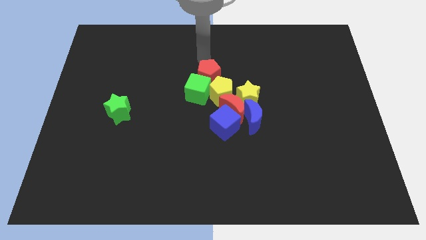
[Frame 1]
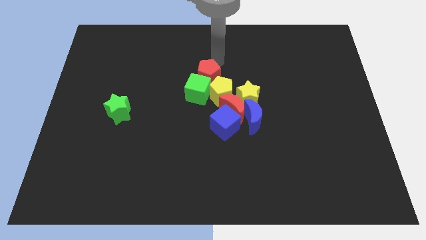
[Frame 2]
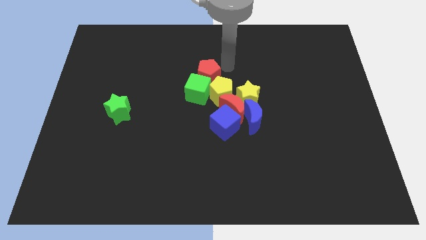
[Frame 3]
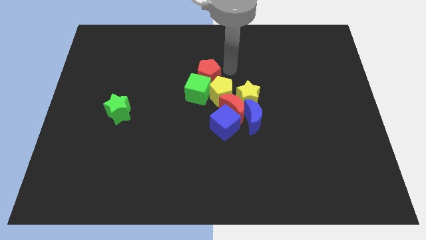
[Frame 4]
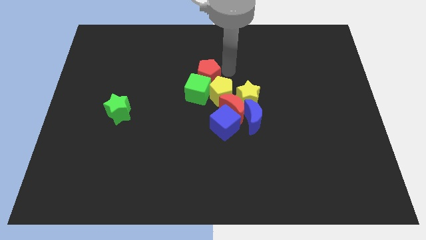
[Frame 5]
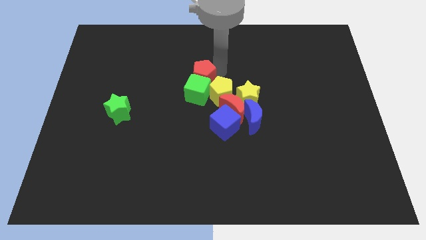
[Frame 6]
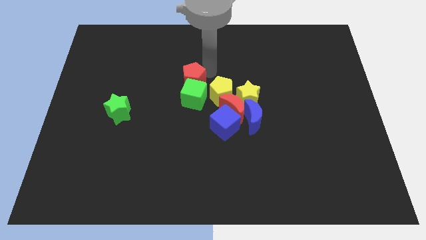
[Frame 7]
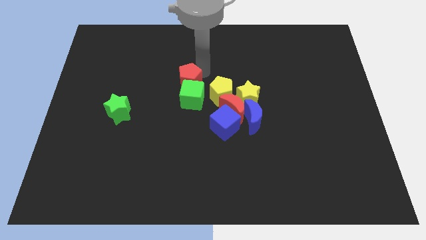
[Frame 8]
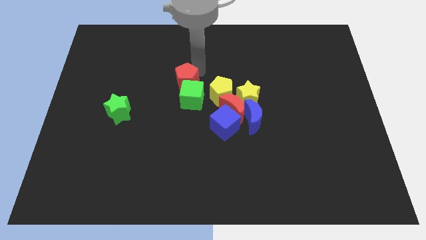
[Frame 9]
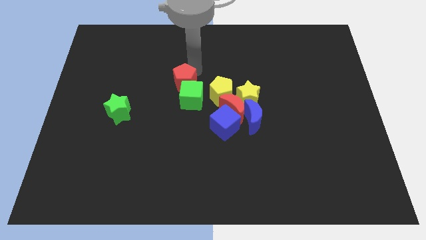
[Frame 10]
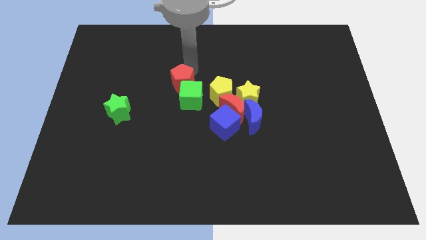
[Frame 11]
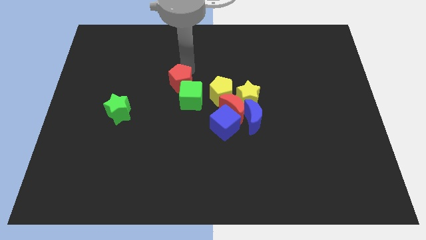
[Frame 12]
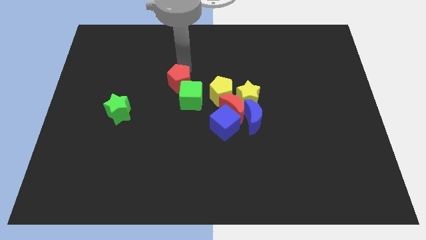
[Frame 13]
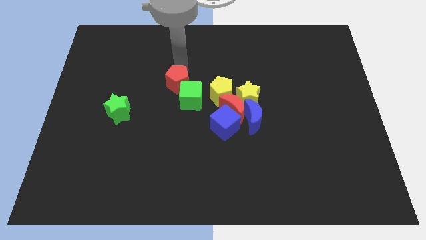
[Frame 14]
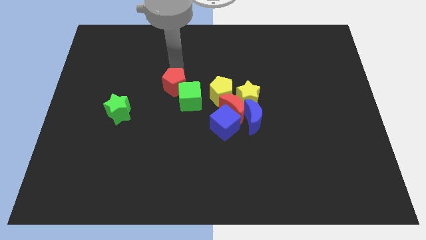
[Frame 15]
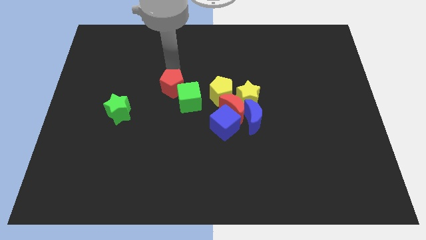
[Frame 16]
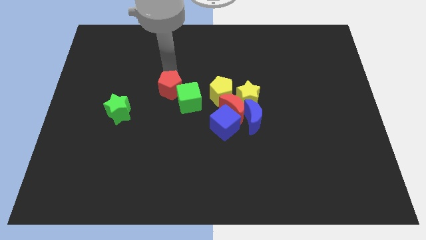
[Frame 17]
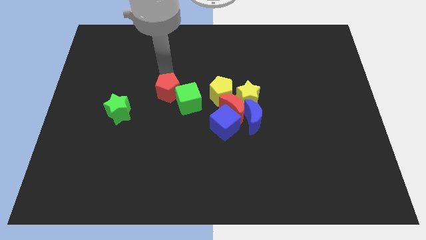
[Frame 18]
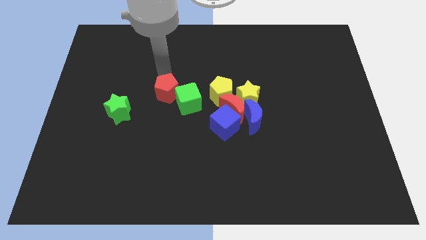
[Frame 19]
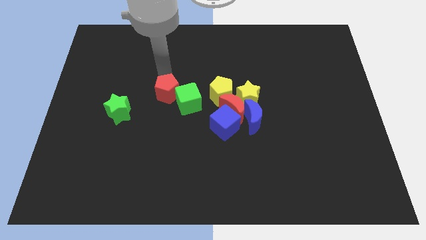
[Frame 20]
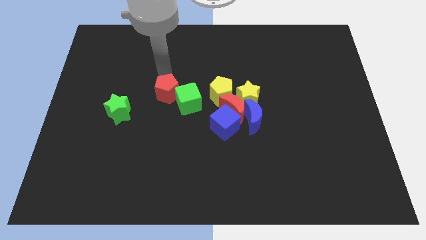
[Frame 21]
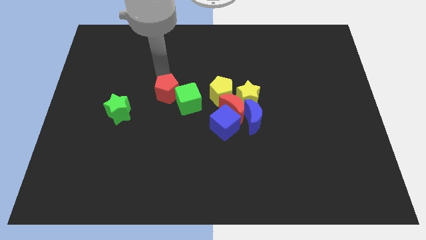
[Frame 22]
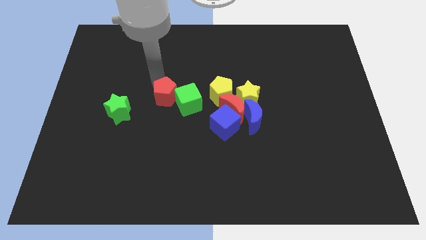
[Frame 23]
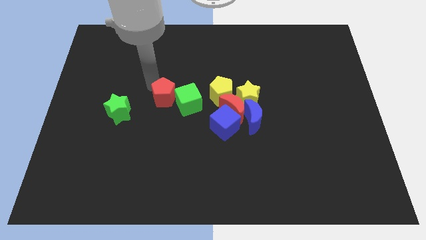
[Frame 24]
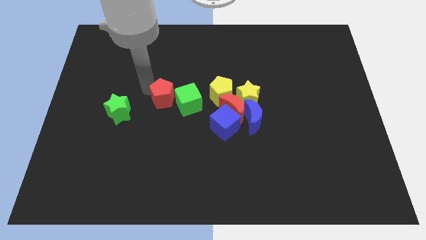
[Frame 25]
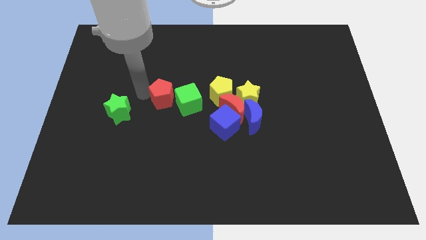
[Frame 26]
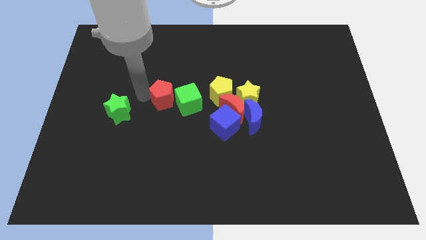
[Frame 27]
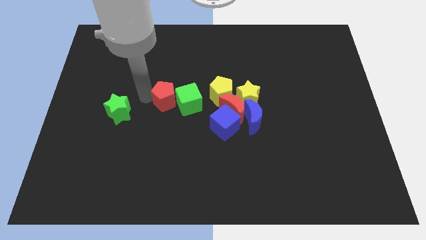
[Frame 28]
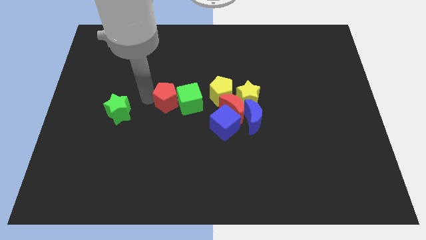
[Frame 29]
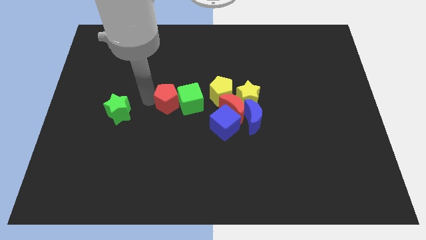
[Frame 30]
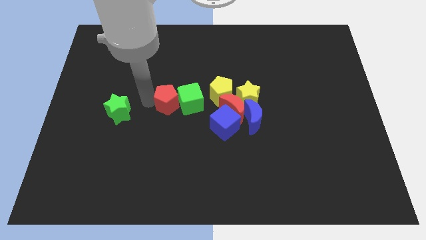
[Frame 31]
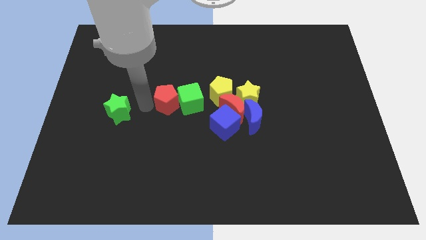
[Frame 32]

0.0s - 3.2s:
place the red pentagon left to the green cube

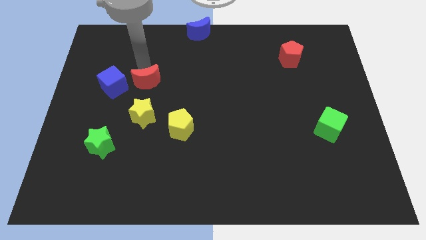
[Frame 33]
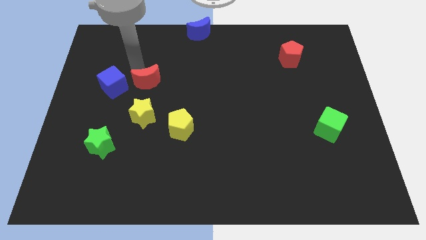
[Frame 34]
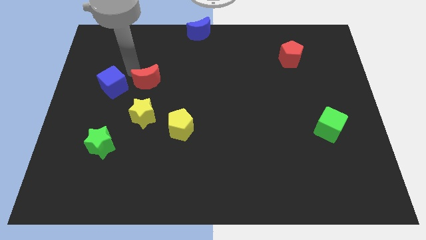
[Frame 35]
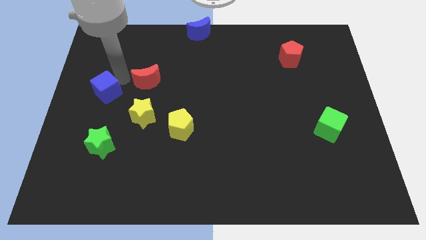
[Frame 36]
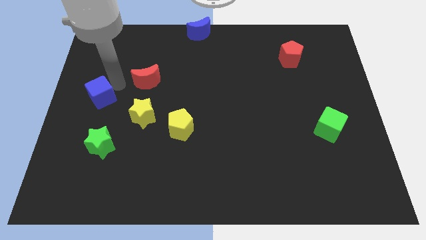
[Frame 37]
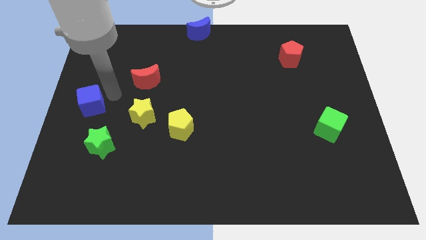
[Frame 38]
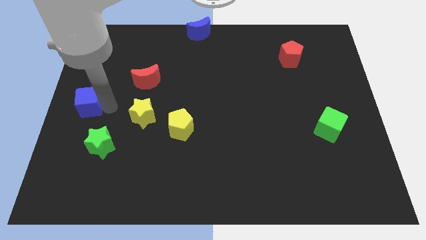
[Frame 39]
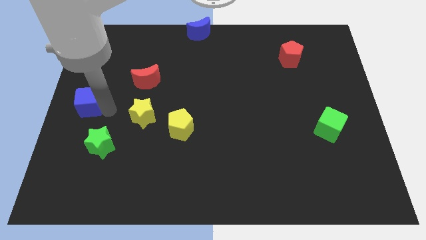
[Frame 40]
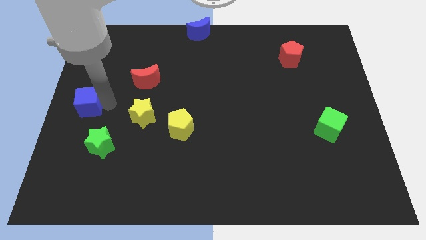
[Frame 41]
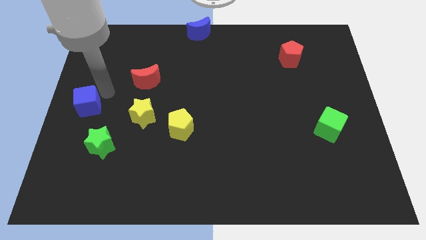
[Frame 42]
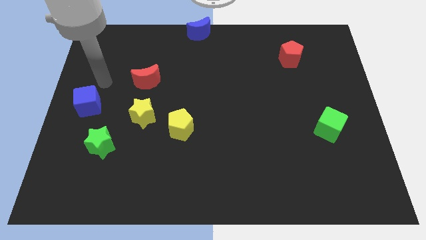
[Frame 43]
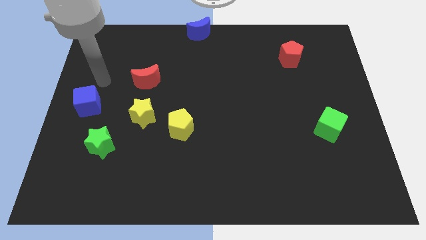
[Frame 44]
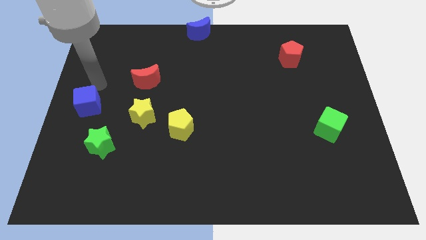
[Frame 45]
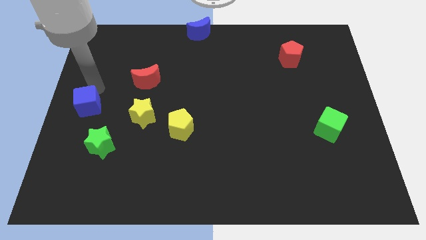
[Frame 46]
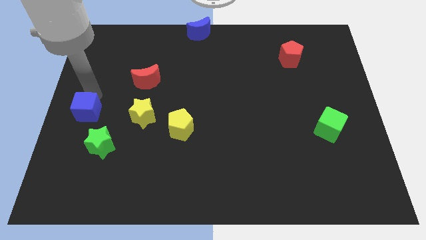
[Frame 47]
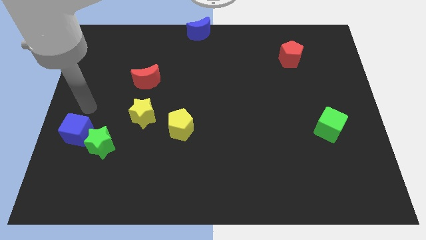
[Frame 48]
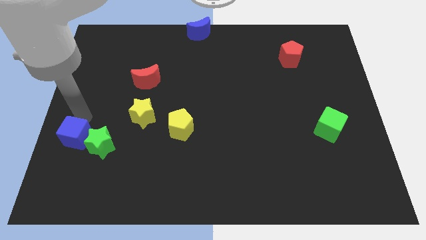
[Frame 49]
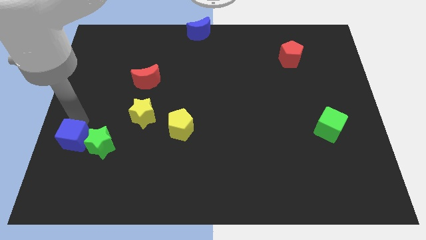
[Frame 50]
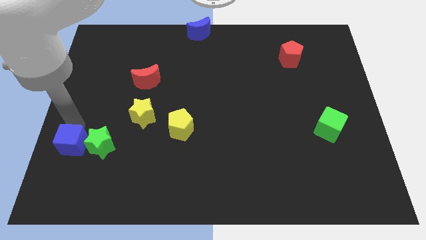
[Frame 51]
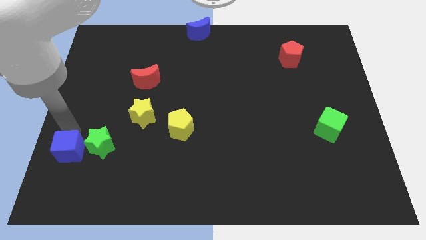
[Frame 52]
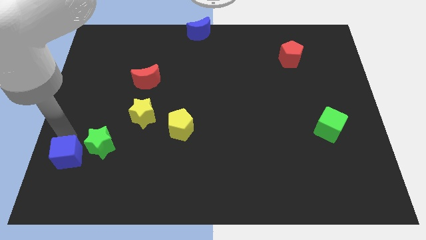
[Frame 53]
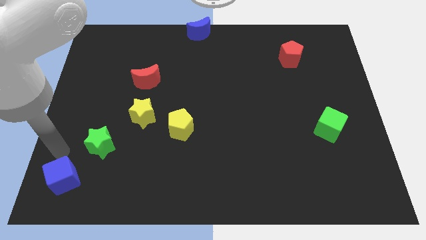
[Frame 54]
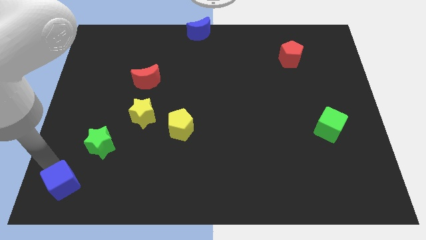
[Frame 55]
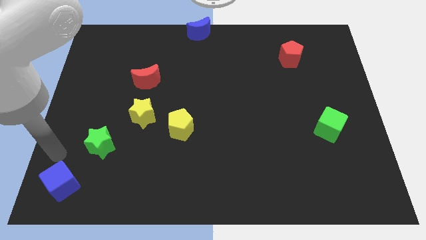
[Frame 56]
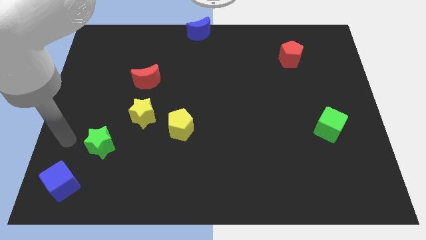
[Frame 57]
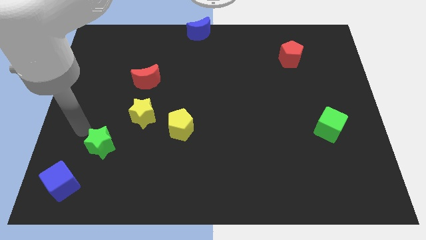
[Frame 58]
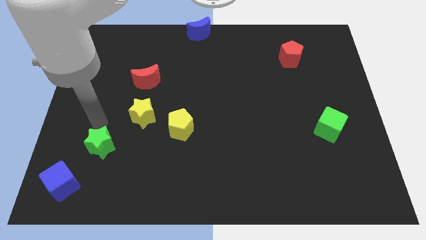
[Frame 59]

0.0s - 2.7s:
push the blue cube to the bottom left of the green star

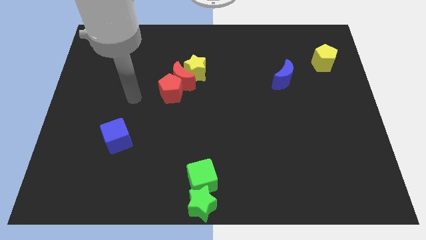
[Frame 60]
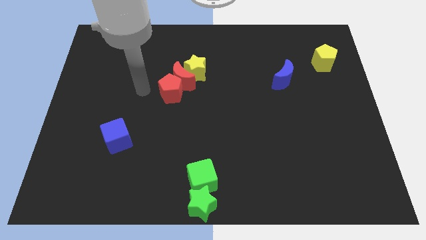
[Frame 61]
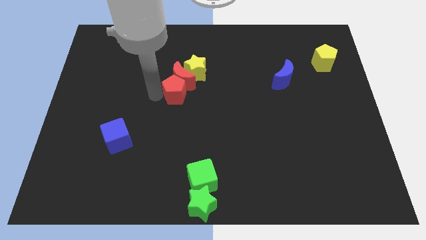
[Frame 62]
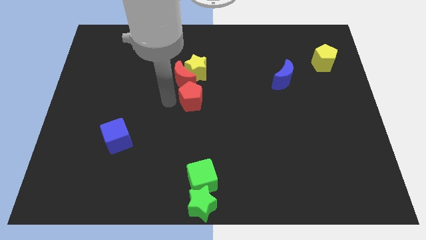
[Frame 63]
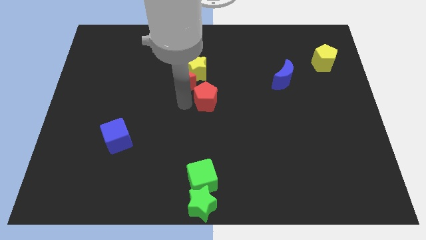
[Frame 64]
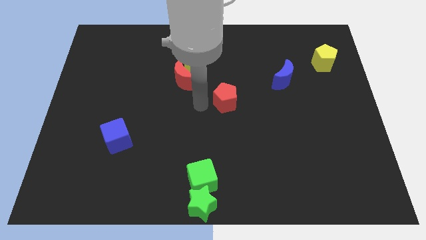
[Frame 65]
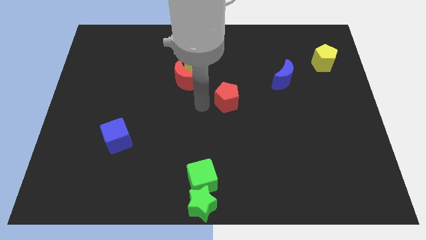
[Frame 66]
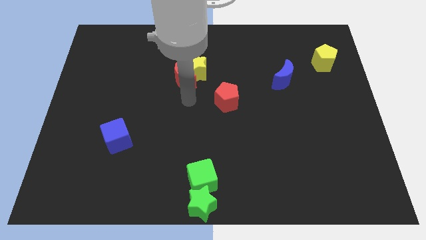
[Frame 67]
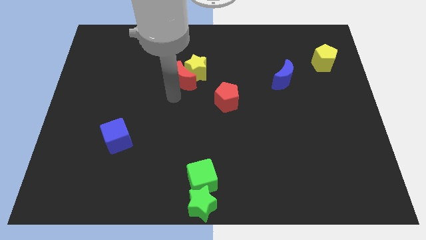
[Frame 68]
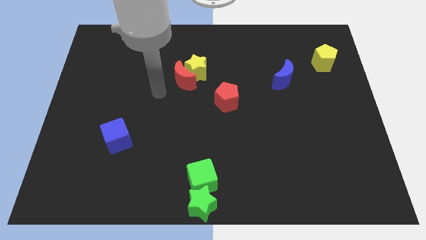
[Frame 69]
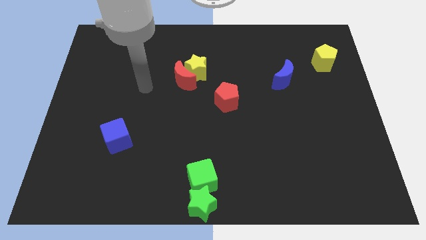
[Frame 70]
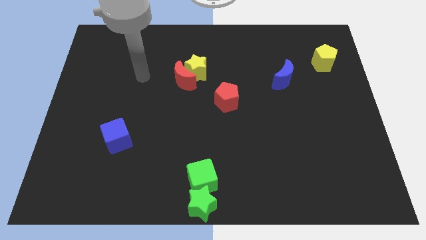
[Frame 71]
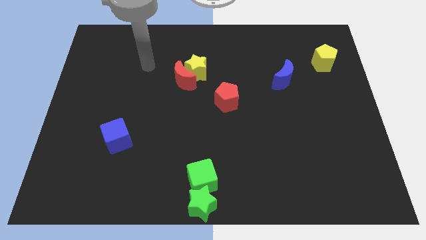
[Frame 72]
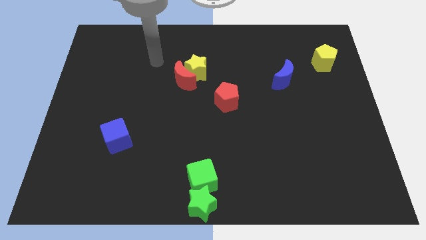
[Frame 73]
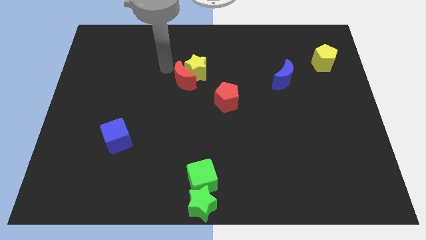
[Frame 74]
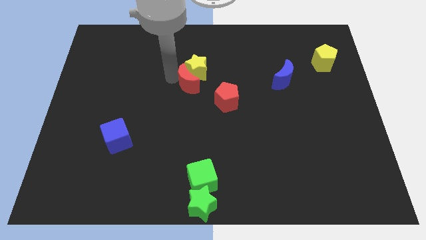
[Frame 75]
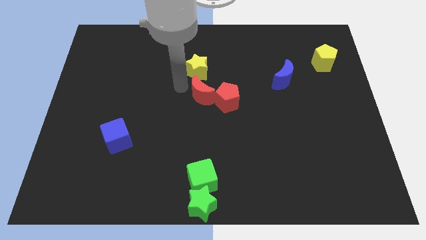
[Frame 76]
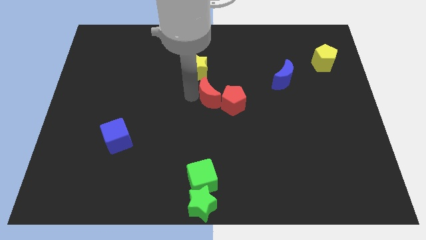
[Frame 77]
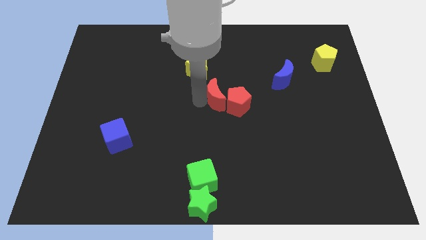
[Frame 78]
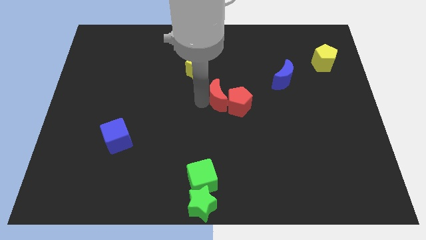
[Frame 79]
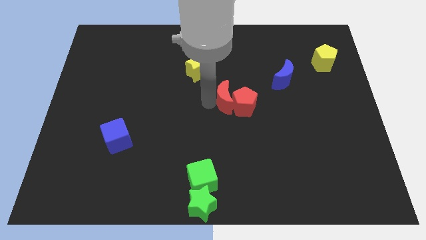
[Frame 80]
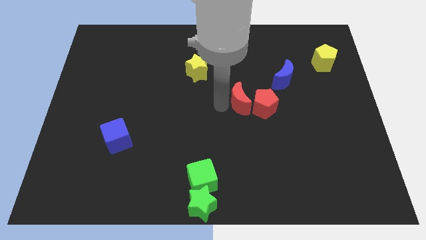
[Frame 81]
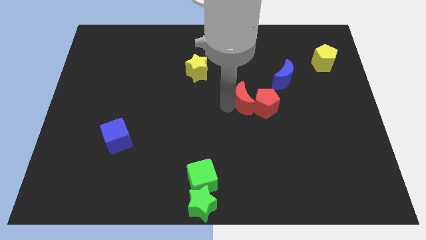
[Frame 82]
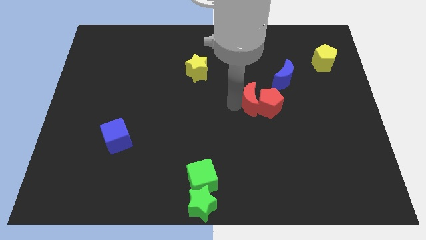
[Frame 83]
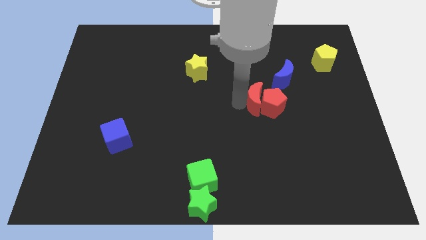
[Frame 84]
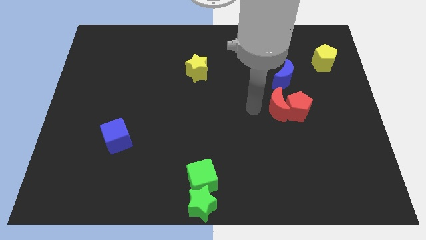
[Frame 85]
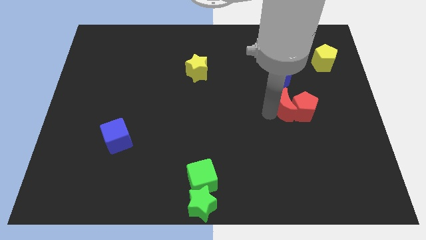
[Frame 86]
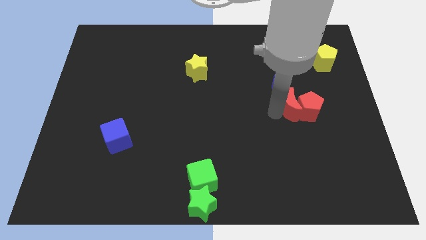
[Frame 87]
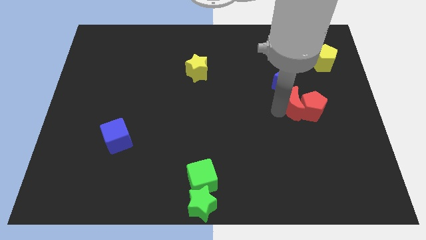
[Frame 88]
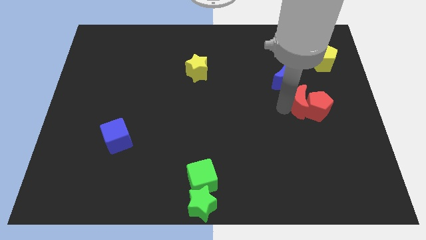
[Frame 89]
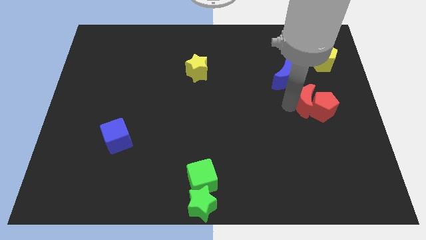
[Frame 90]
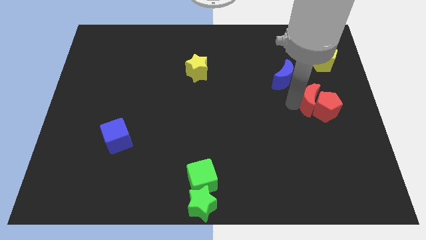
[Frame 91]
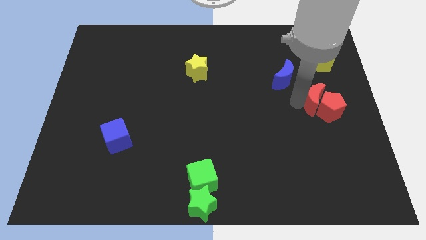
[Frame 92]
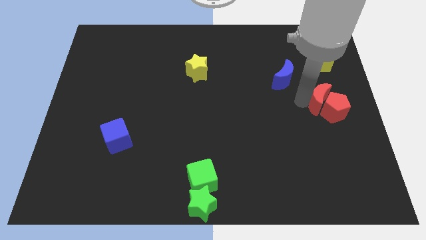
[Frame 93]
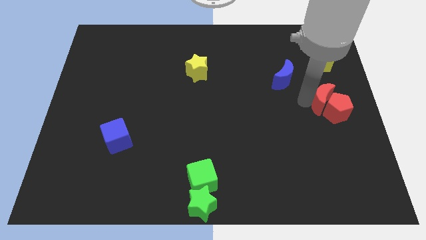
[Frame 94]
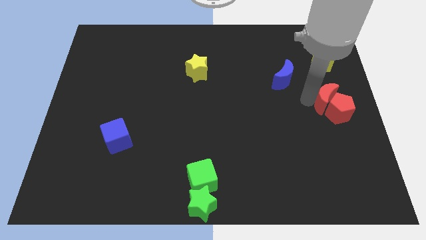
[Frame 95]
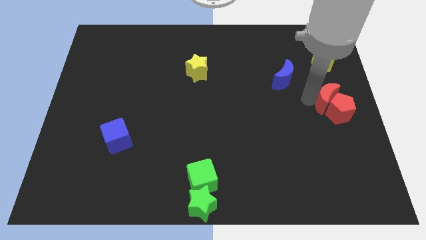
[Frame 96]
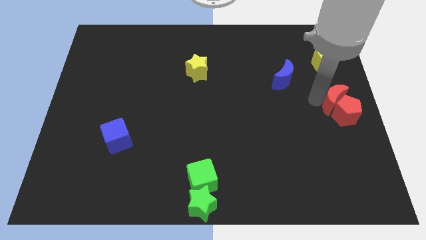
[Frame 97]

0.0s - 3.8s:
put the red blocks to the center right side of the board
